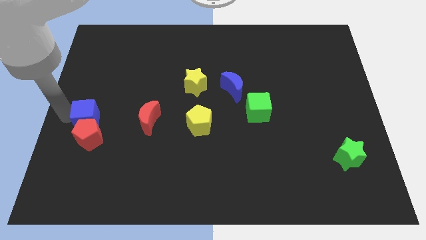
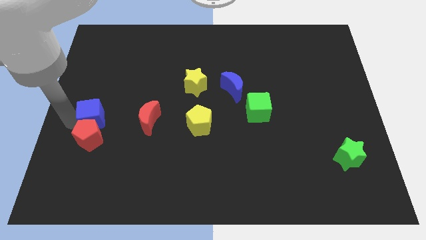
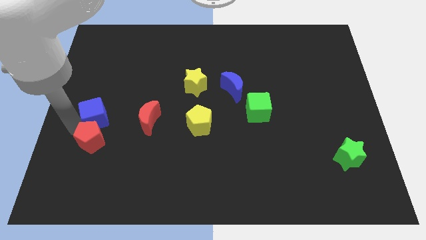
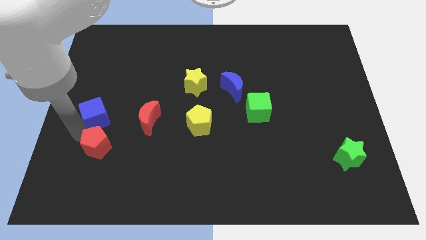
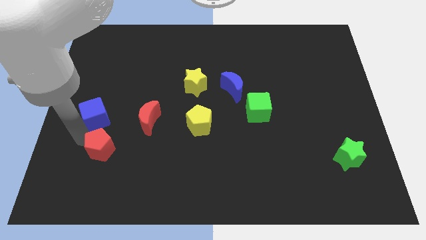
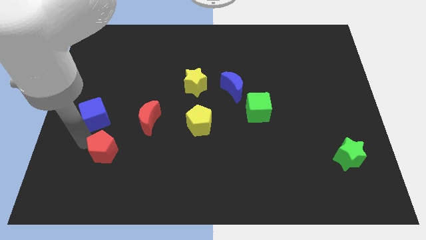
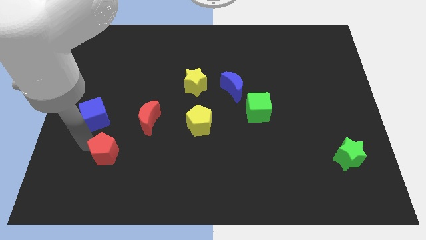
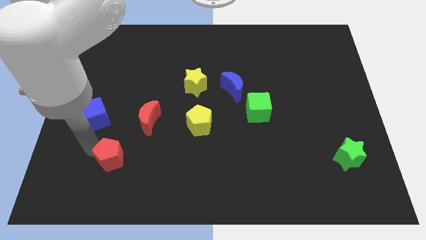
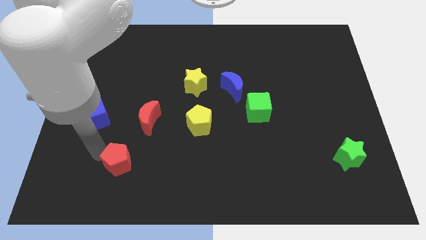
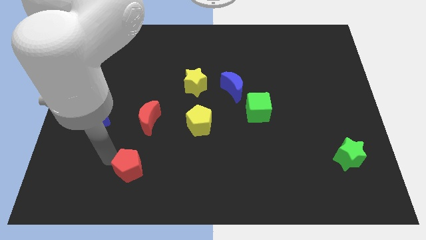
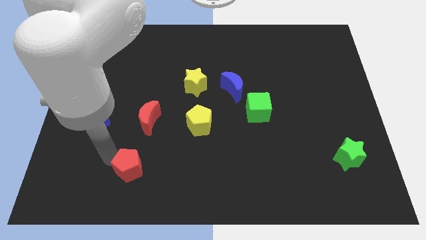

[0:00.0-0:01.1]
separate the red pentagon from the blue cube

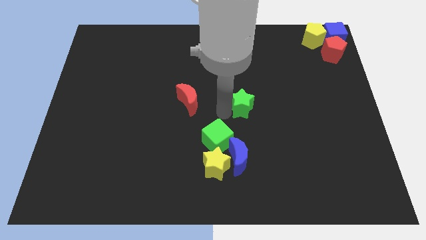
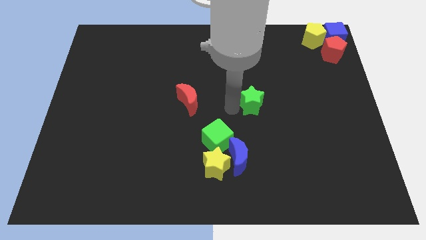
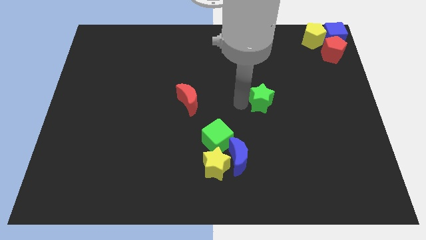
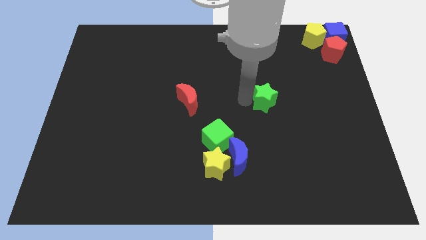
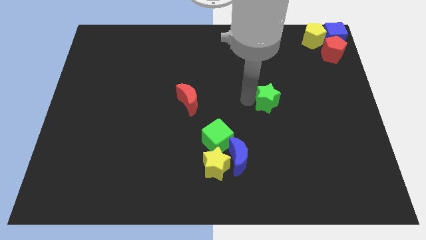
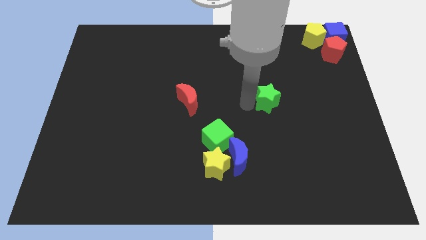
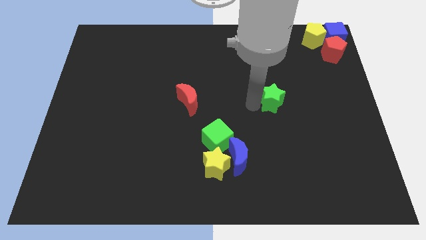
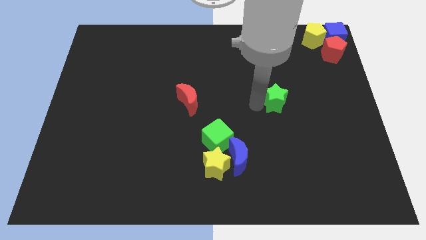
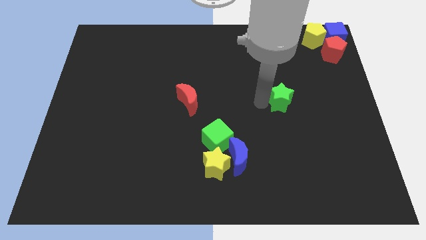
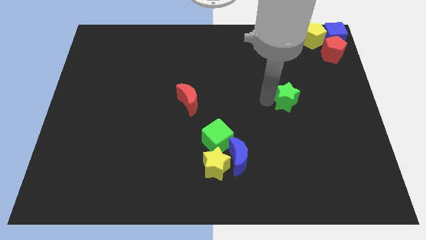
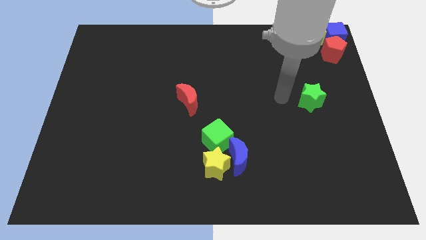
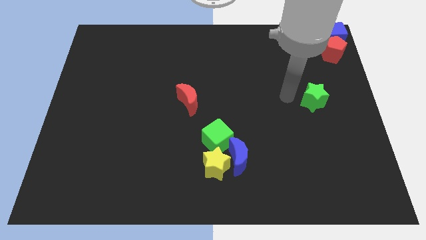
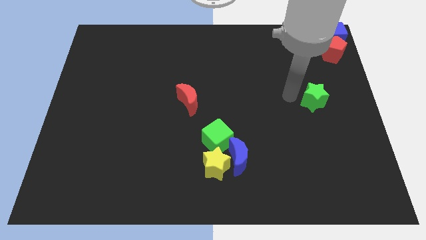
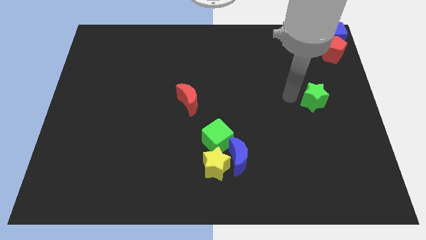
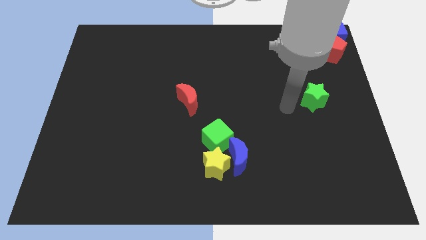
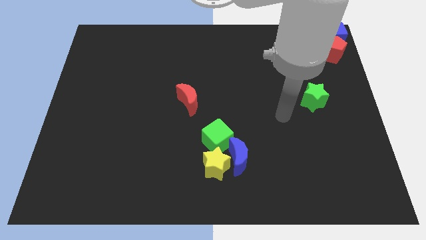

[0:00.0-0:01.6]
move the green star away from the group of blocks

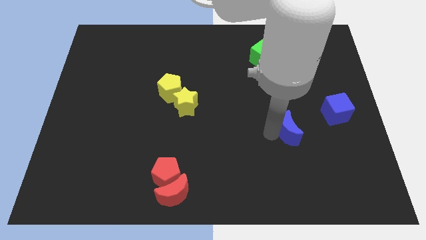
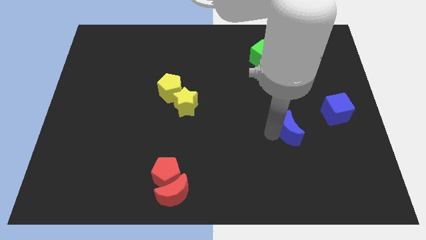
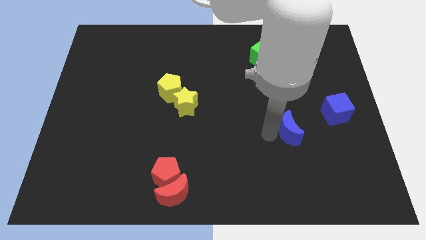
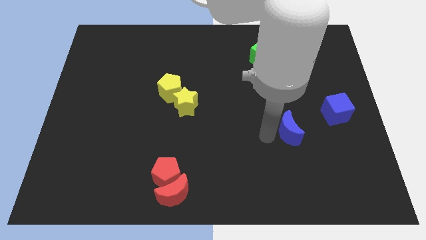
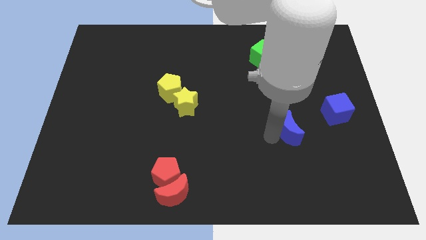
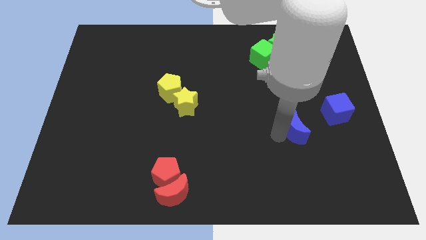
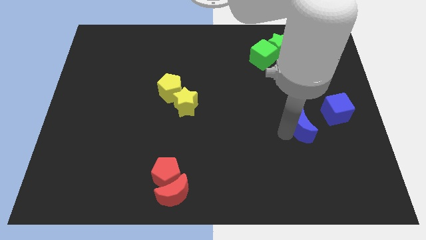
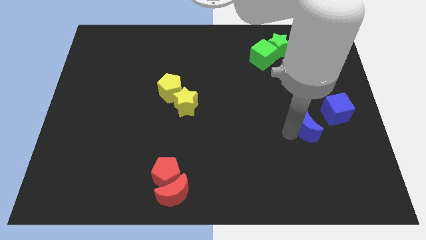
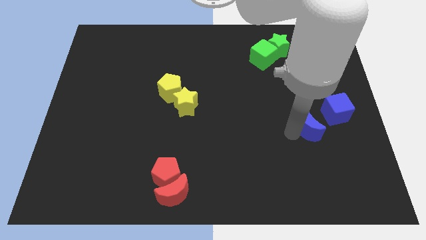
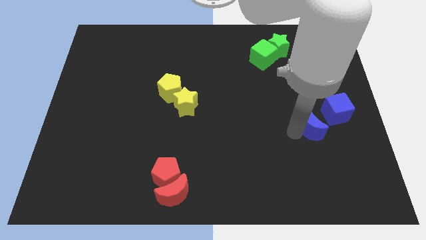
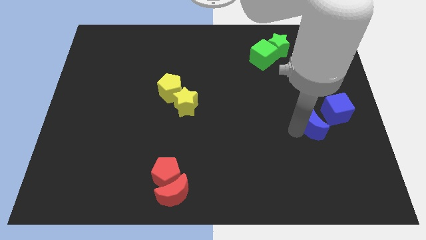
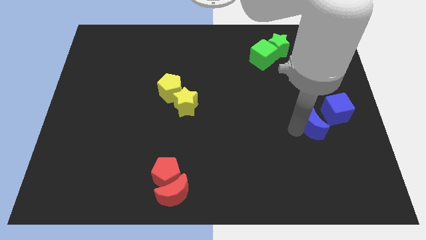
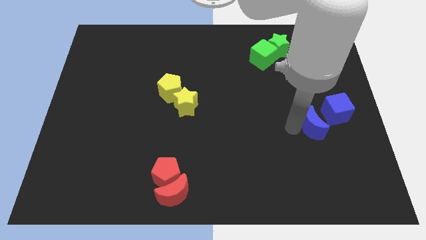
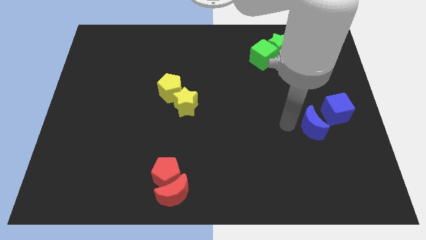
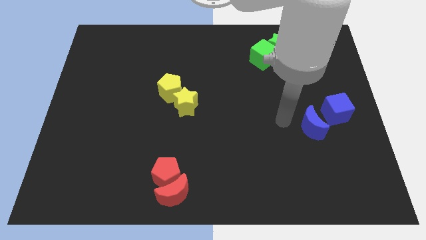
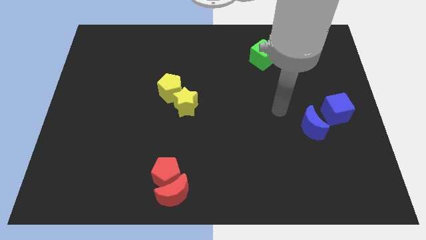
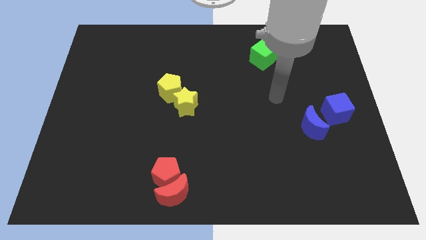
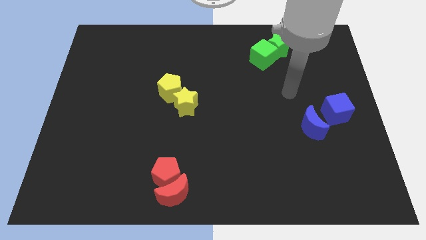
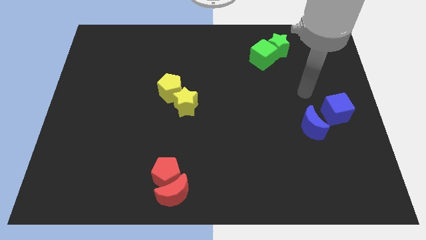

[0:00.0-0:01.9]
move the blue moon towards the blue cube

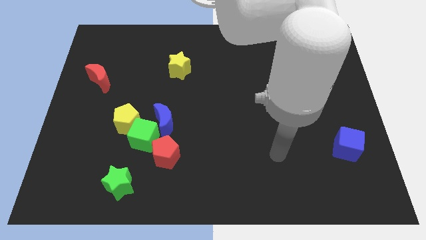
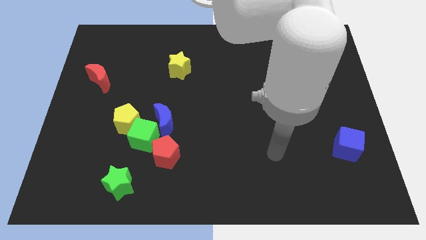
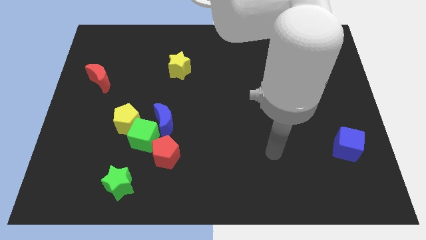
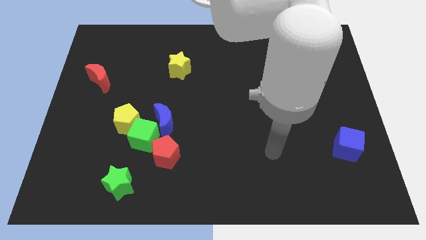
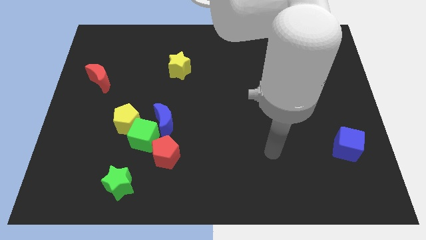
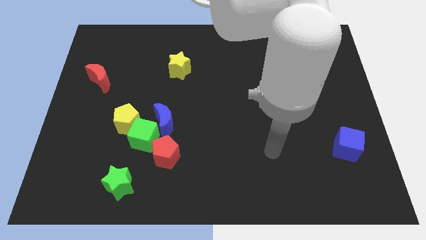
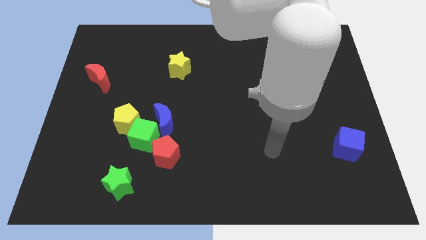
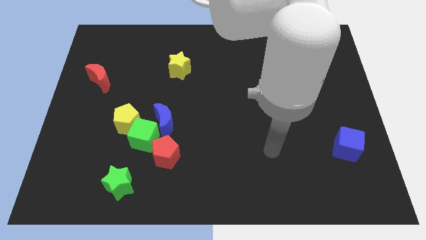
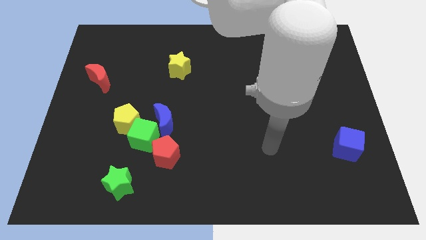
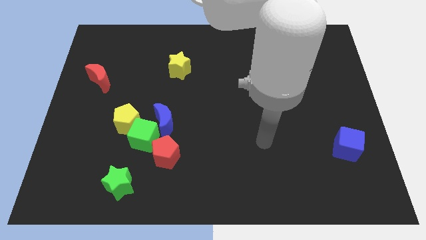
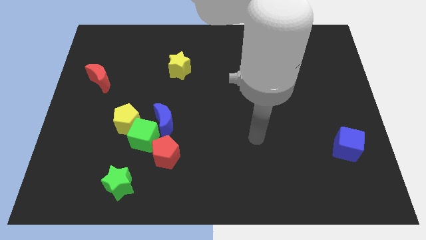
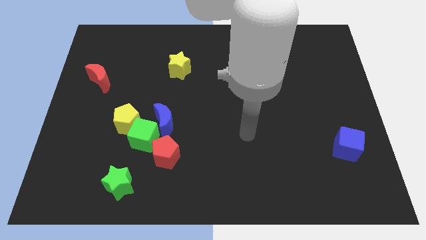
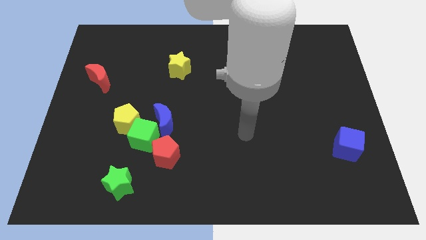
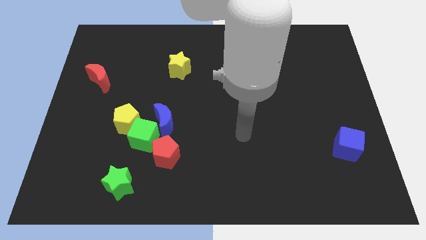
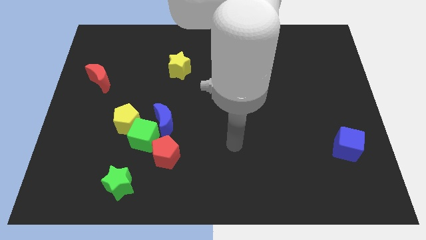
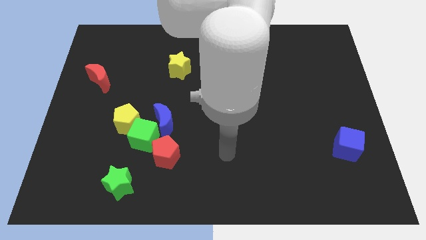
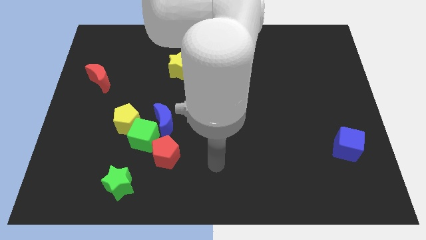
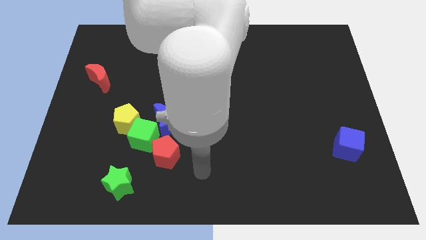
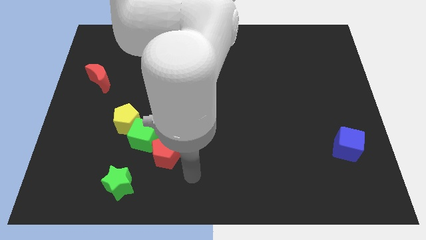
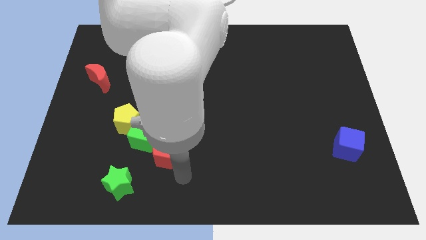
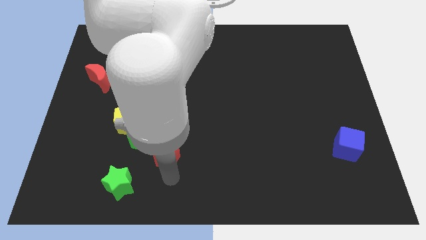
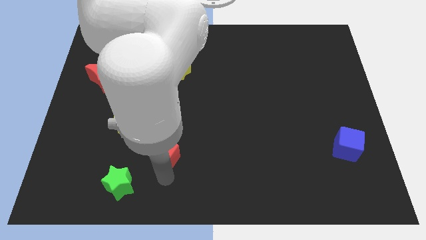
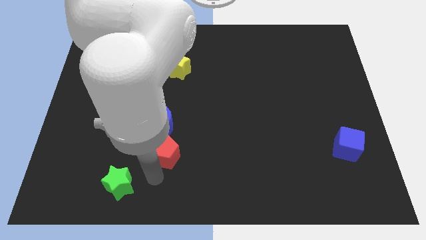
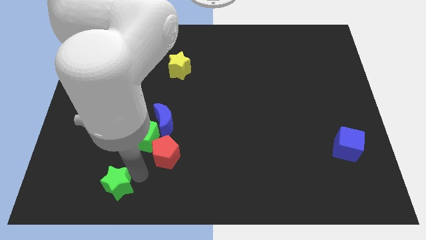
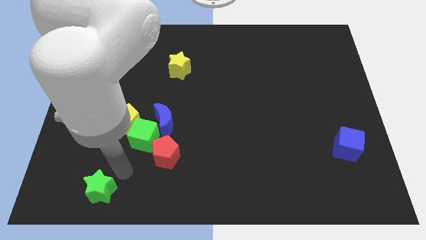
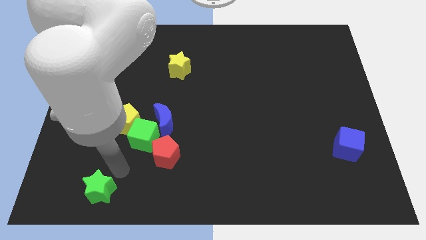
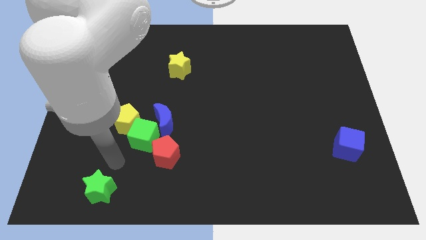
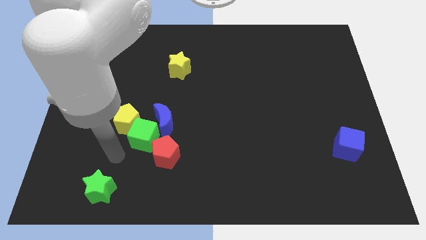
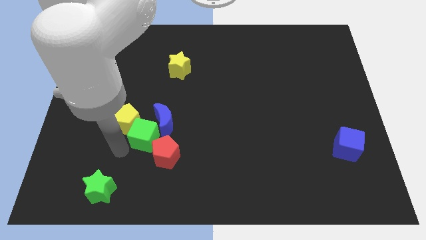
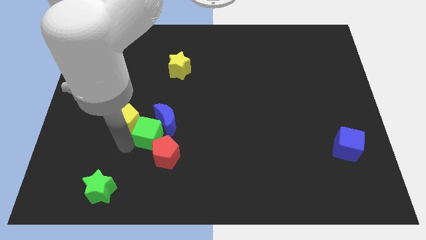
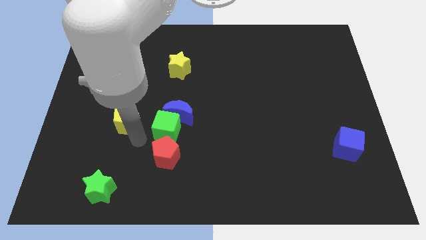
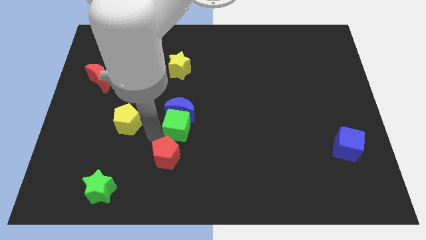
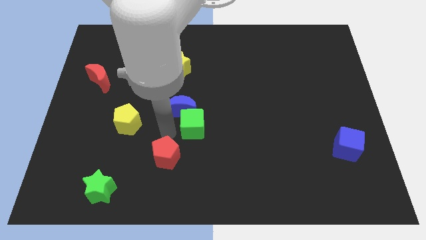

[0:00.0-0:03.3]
place the green cube to the bottom side of the blue crescent

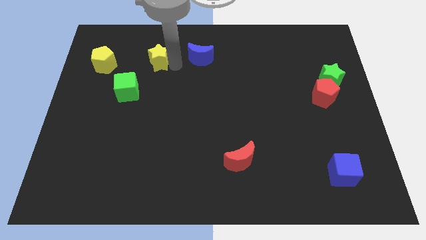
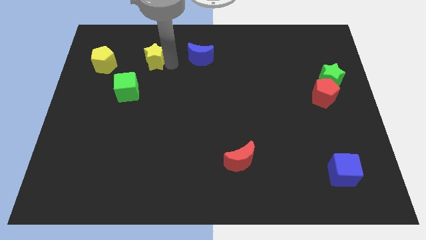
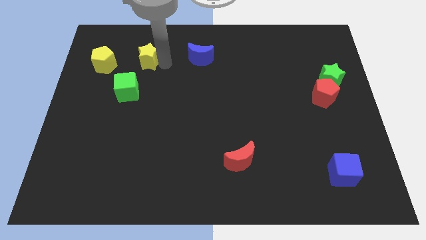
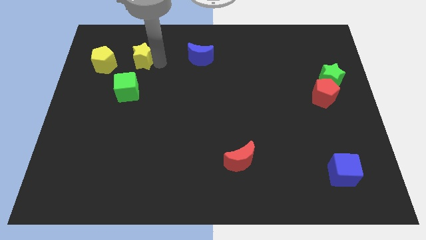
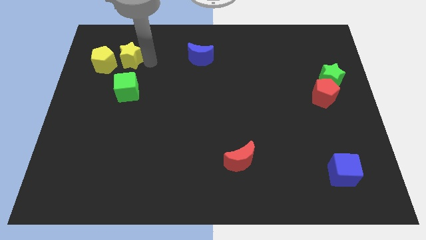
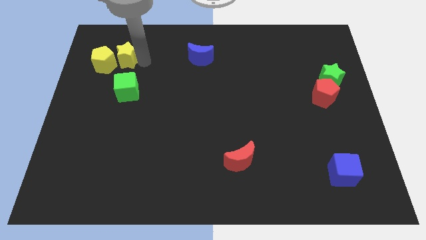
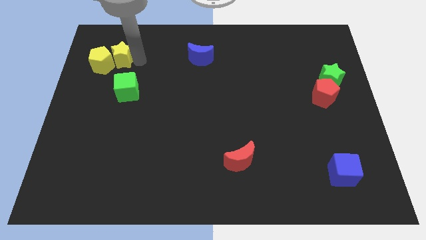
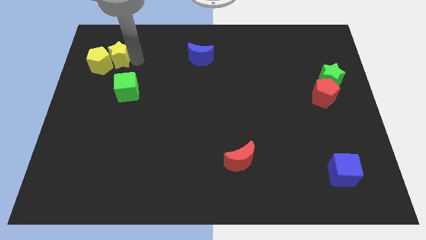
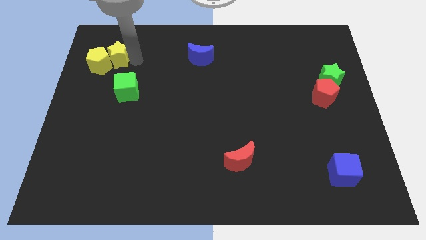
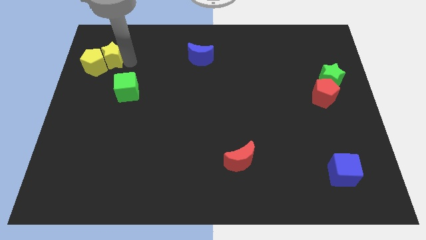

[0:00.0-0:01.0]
push the yellow star in to yellow pentagon
